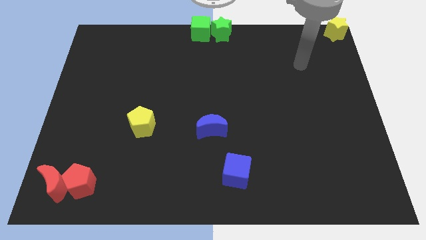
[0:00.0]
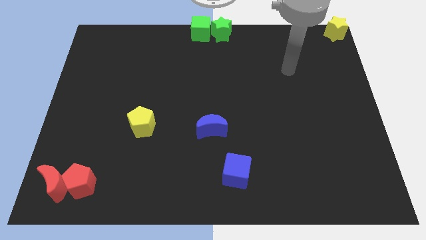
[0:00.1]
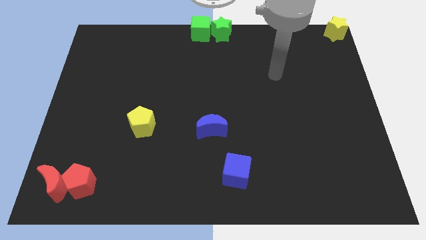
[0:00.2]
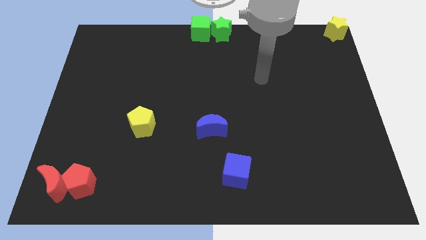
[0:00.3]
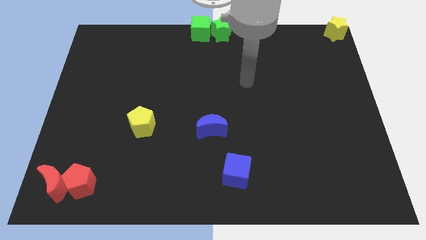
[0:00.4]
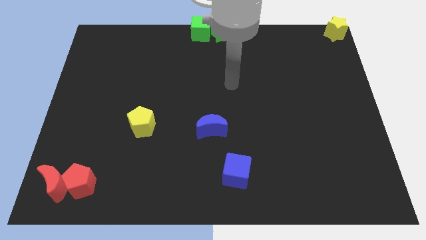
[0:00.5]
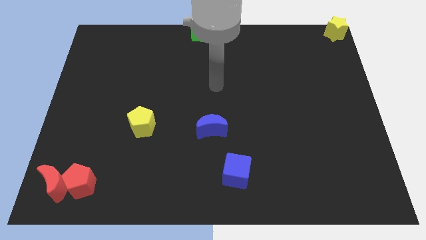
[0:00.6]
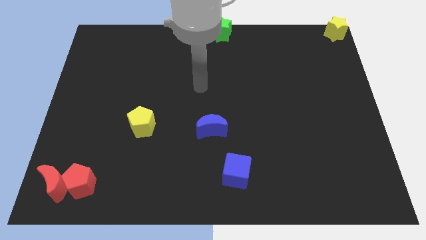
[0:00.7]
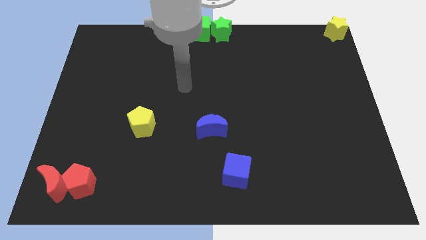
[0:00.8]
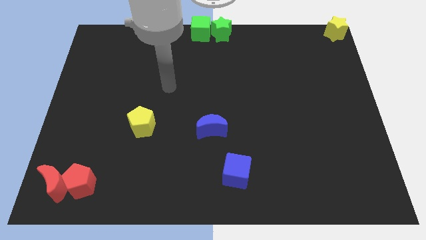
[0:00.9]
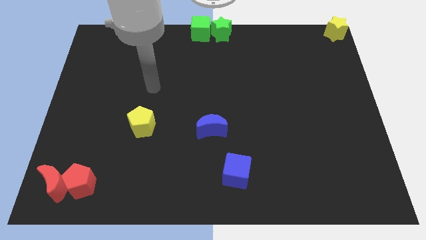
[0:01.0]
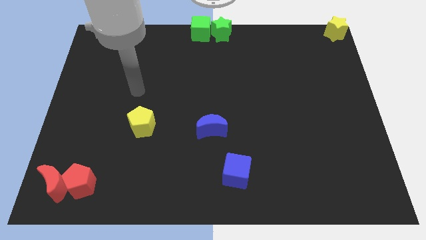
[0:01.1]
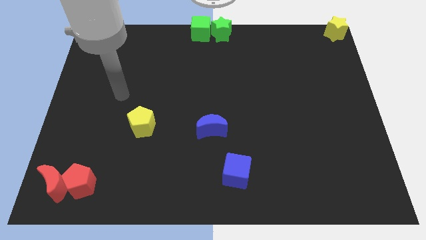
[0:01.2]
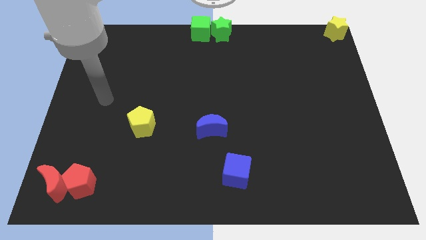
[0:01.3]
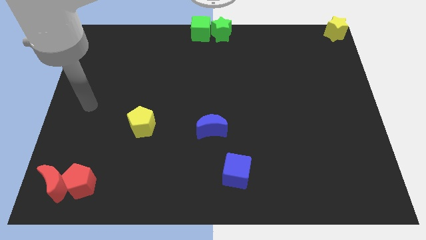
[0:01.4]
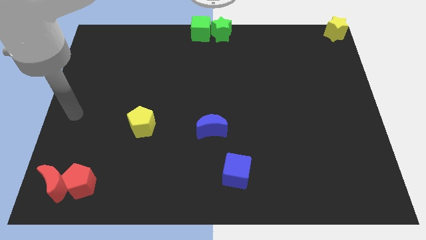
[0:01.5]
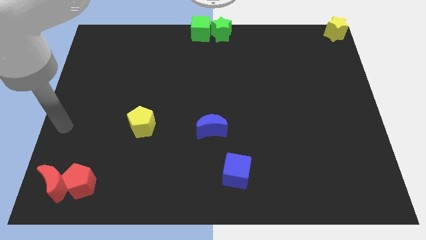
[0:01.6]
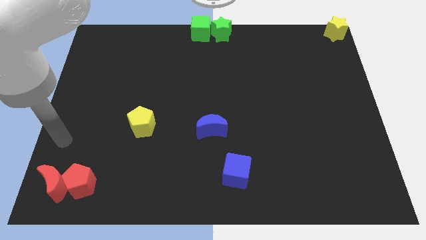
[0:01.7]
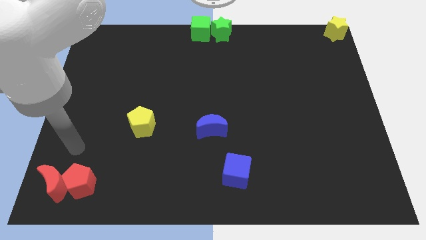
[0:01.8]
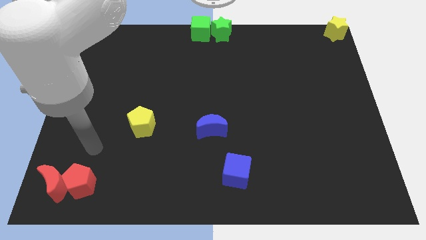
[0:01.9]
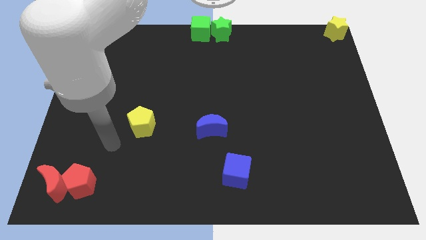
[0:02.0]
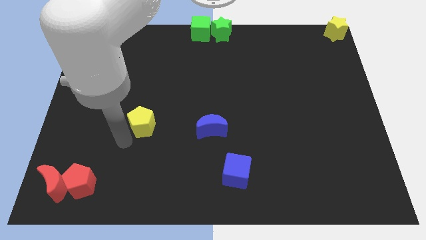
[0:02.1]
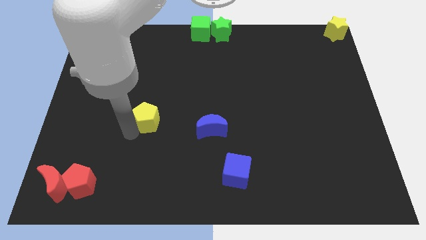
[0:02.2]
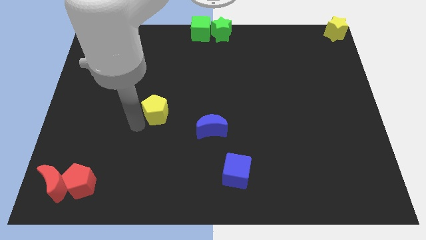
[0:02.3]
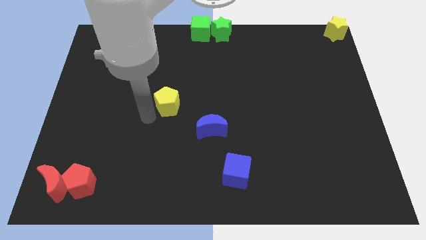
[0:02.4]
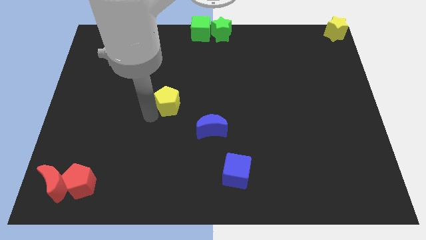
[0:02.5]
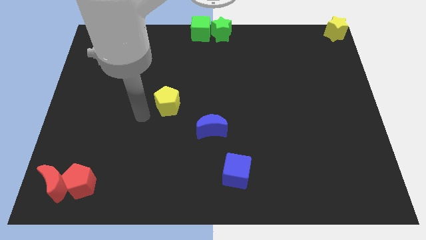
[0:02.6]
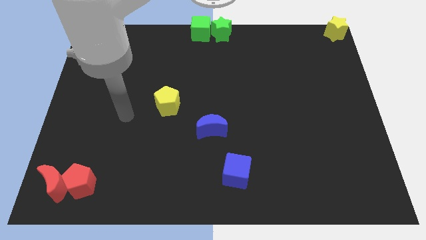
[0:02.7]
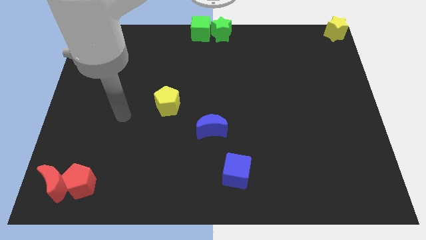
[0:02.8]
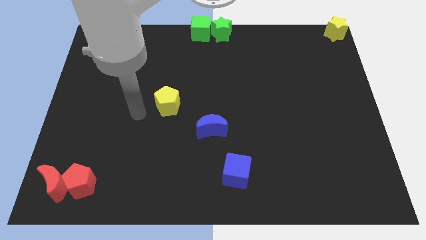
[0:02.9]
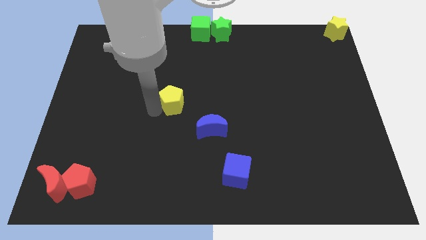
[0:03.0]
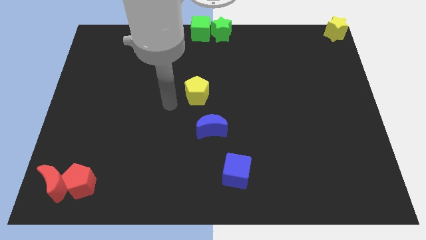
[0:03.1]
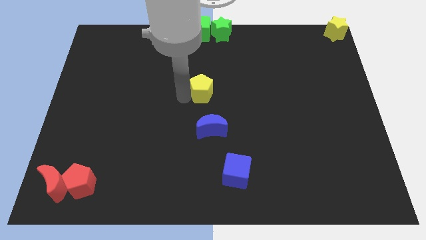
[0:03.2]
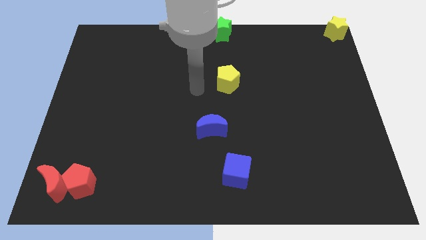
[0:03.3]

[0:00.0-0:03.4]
place the yellow pentagon down to the green star

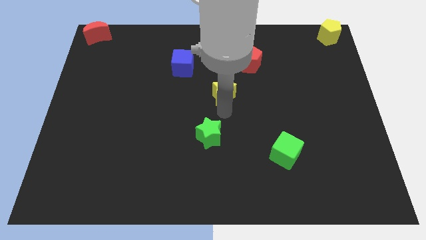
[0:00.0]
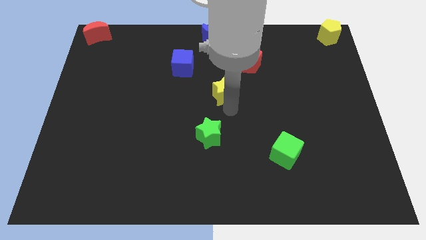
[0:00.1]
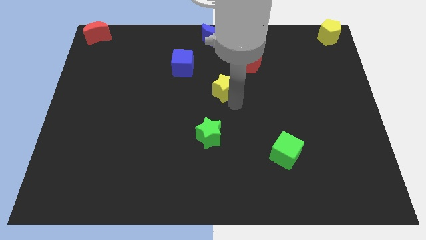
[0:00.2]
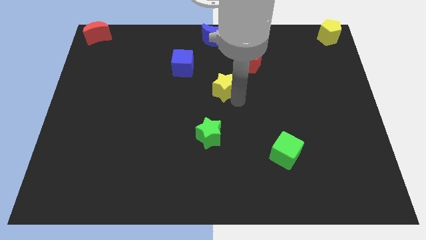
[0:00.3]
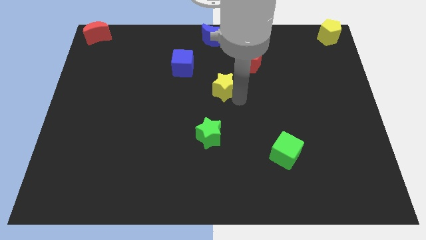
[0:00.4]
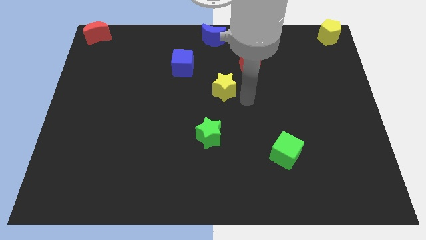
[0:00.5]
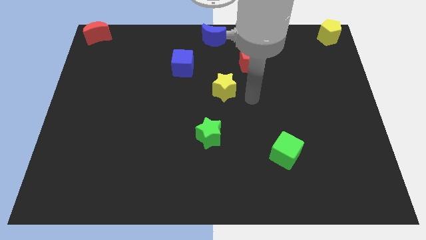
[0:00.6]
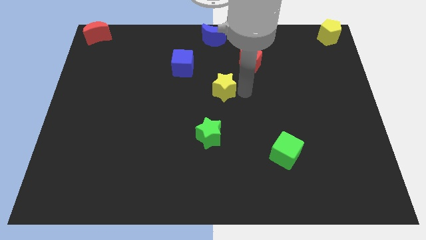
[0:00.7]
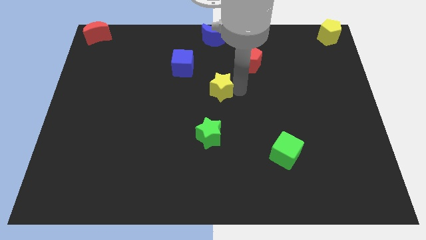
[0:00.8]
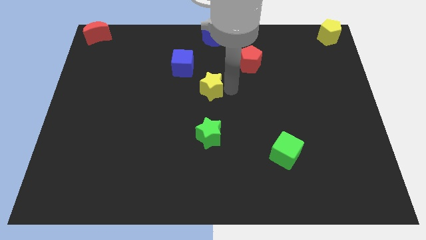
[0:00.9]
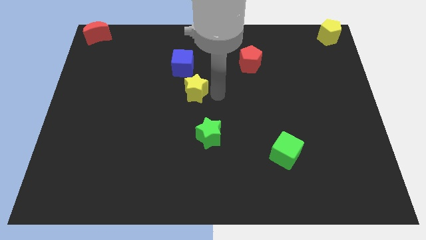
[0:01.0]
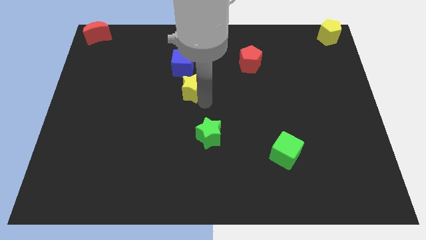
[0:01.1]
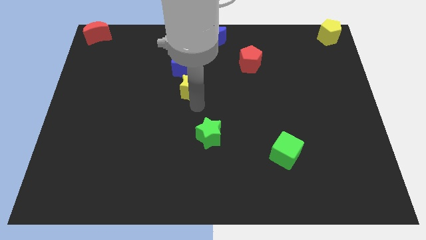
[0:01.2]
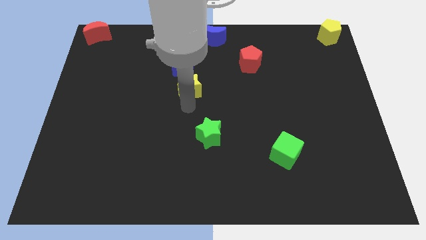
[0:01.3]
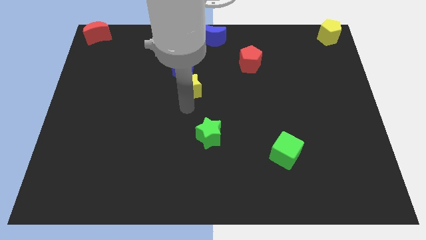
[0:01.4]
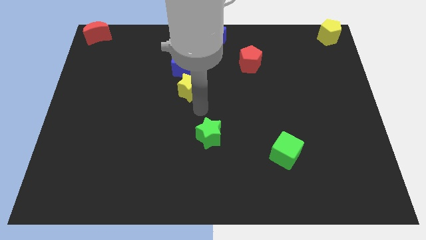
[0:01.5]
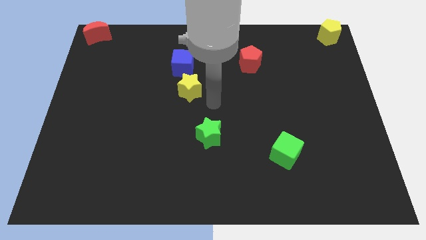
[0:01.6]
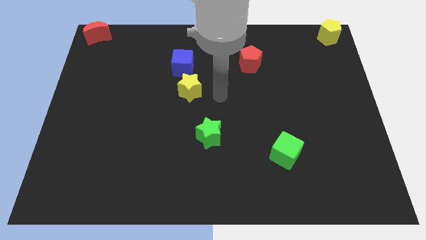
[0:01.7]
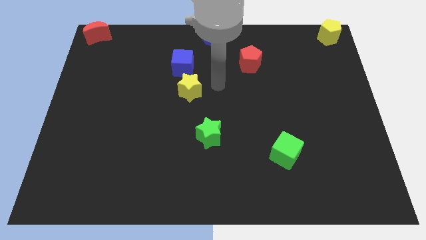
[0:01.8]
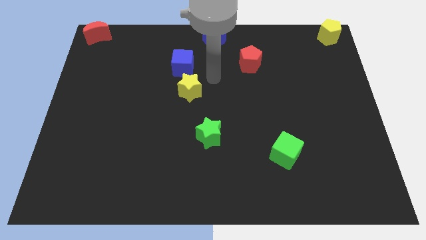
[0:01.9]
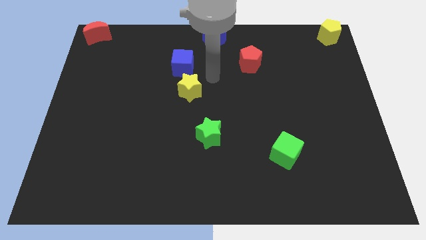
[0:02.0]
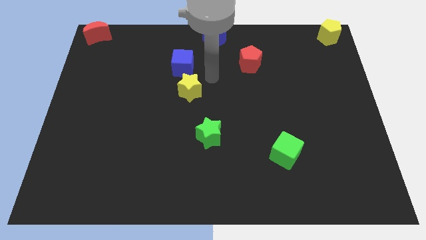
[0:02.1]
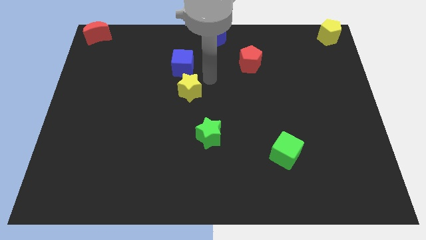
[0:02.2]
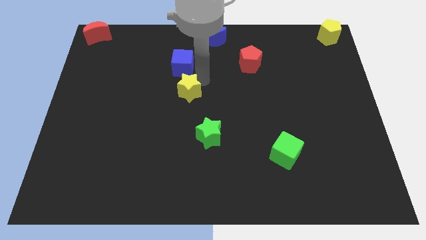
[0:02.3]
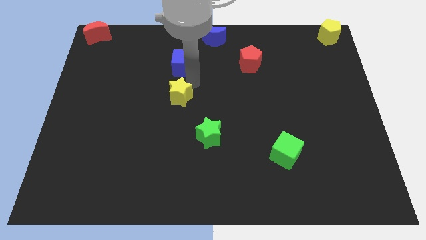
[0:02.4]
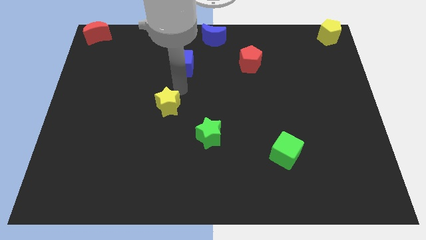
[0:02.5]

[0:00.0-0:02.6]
move the yellow star diagonal below the blue cube

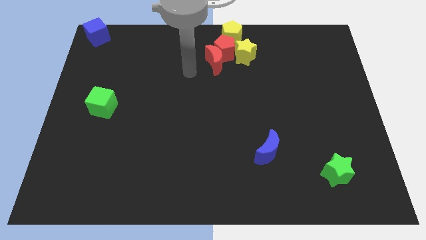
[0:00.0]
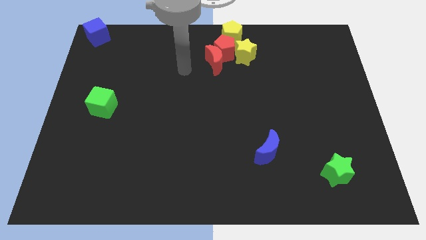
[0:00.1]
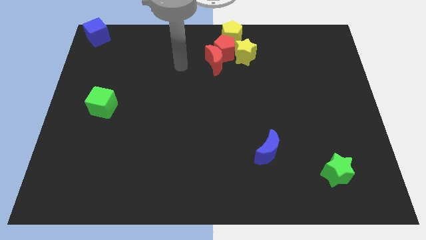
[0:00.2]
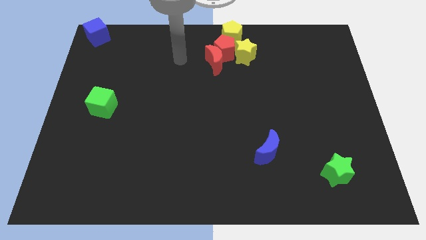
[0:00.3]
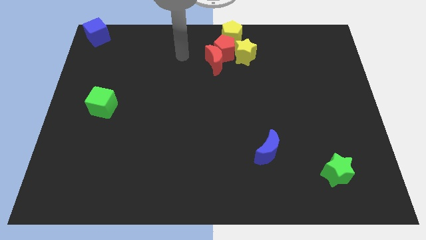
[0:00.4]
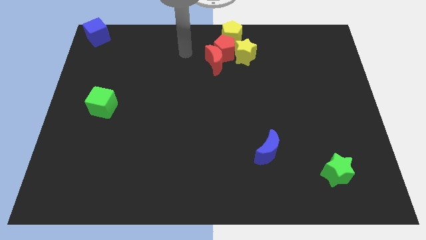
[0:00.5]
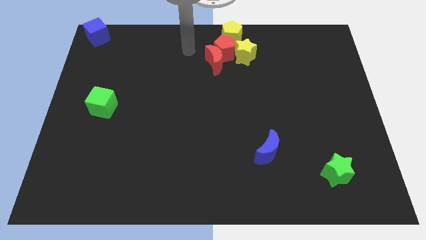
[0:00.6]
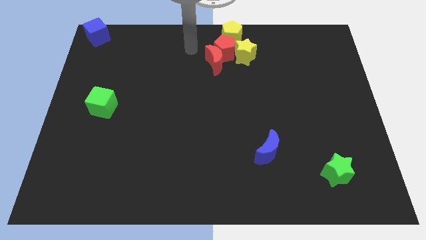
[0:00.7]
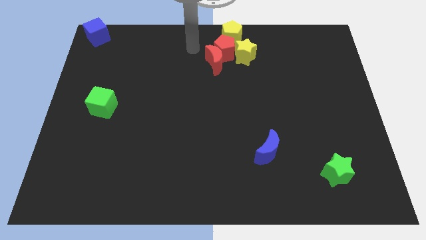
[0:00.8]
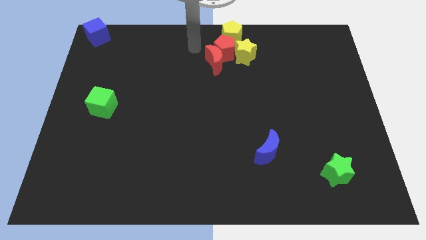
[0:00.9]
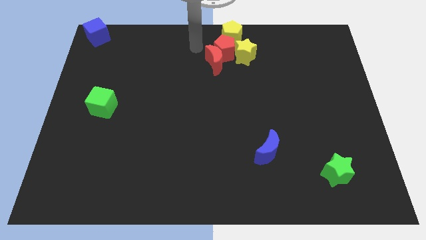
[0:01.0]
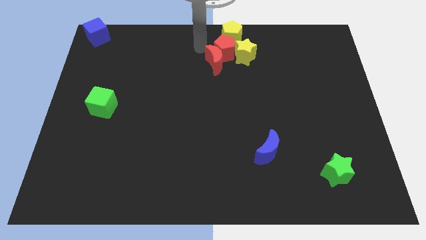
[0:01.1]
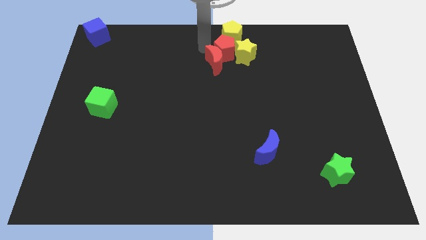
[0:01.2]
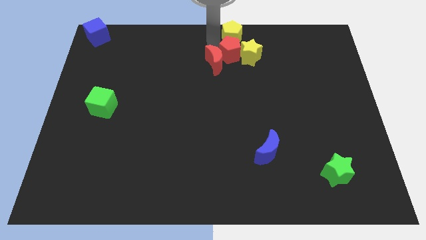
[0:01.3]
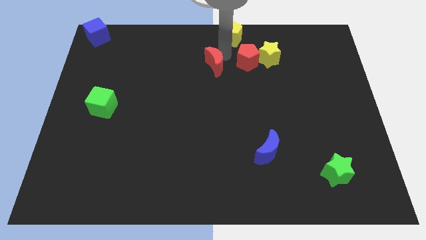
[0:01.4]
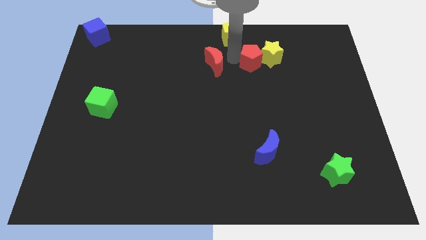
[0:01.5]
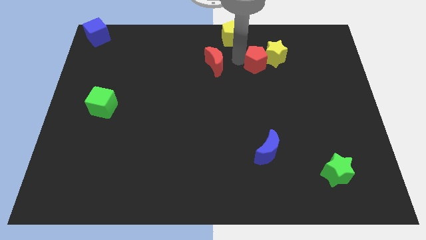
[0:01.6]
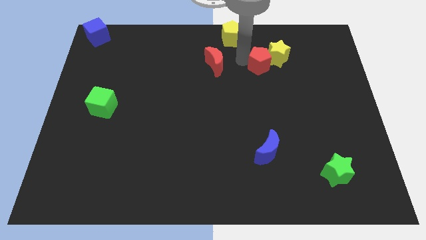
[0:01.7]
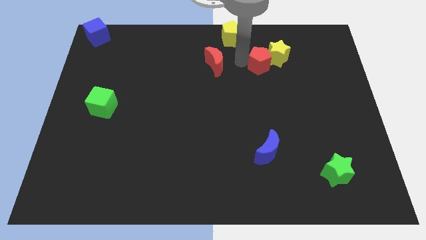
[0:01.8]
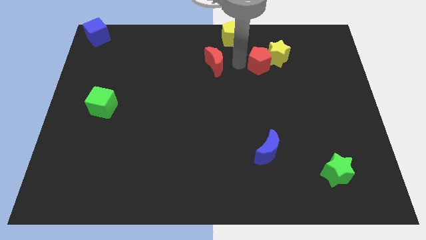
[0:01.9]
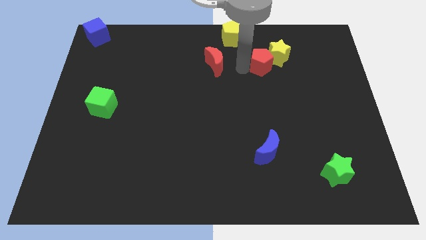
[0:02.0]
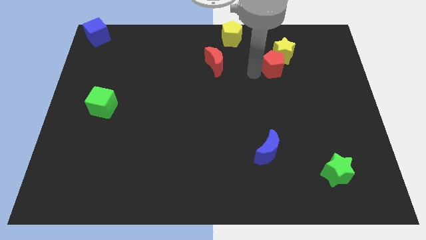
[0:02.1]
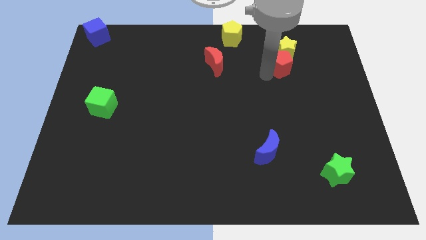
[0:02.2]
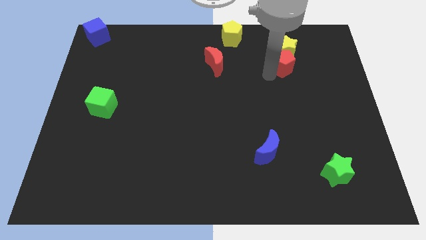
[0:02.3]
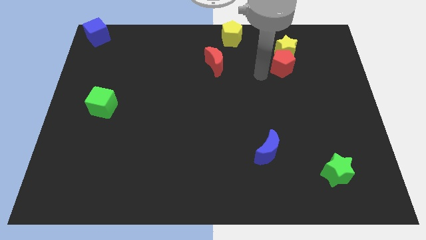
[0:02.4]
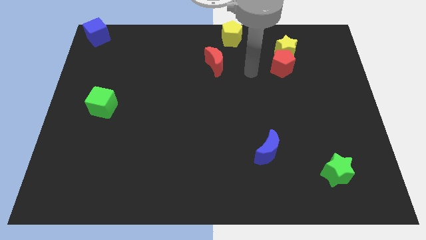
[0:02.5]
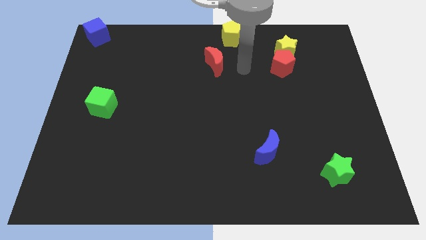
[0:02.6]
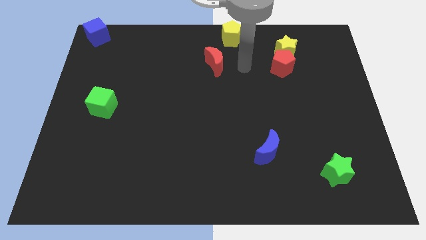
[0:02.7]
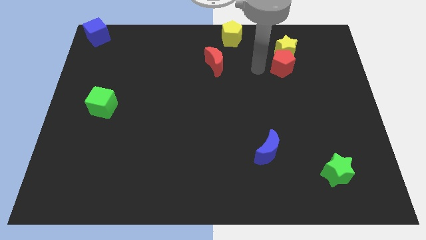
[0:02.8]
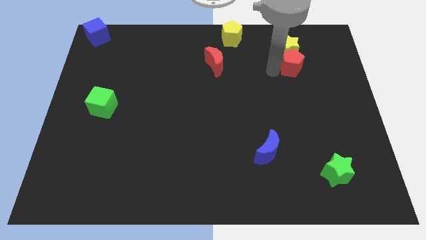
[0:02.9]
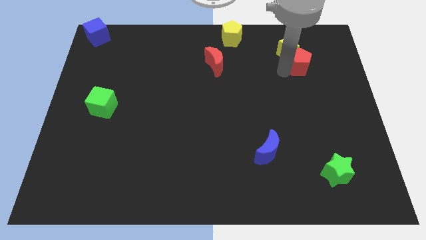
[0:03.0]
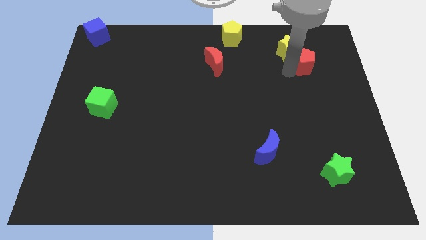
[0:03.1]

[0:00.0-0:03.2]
move the red pentagon diagonally to the blue crescent
